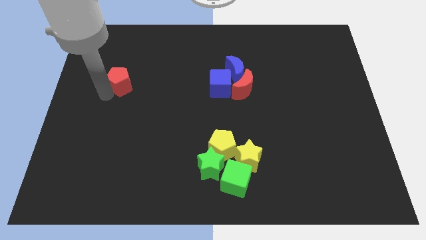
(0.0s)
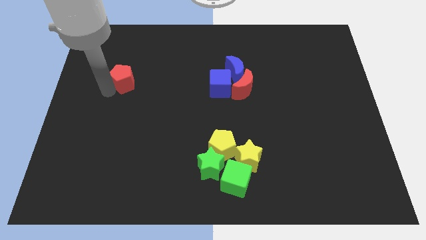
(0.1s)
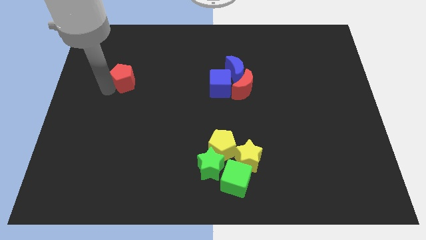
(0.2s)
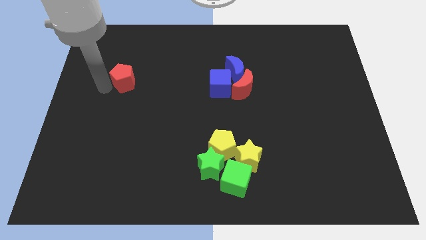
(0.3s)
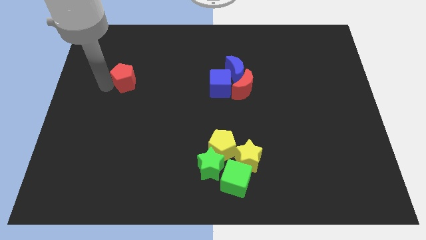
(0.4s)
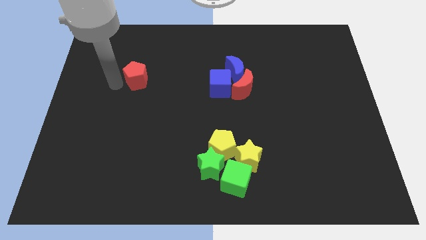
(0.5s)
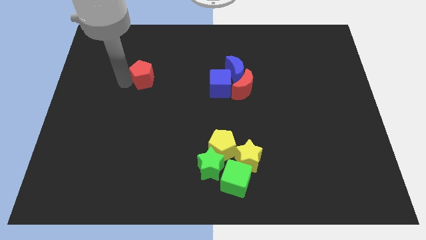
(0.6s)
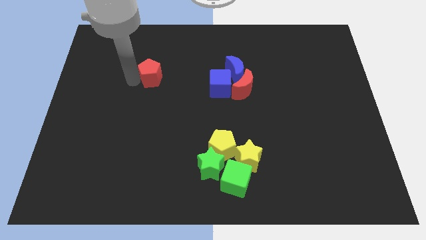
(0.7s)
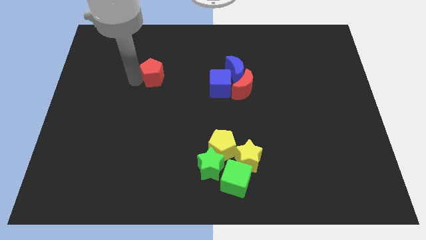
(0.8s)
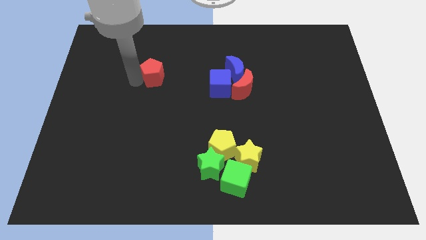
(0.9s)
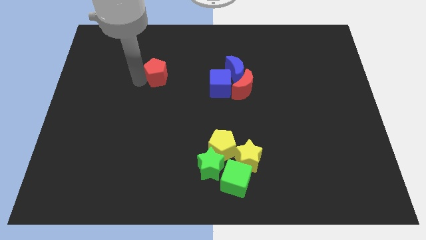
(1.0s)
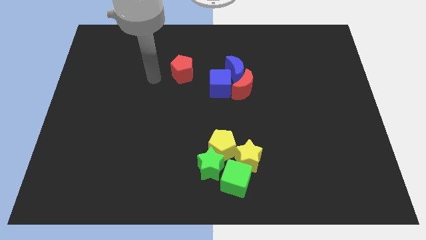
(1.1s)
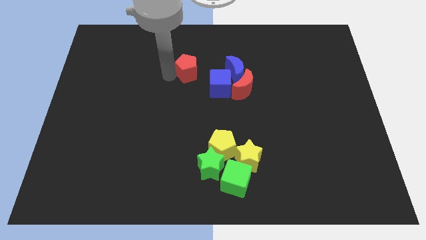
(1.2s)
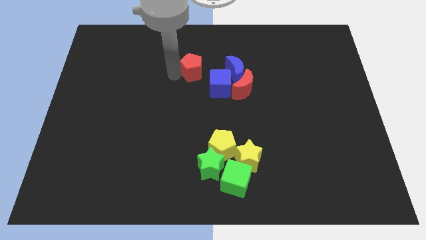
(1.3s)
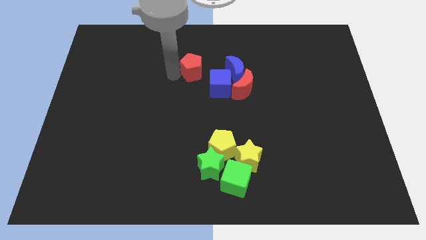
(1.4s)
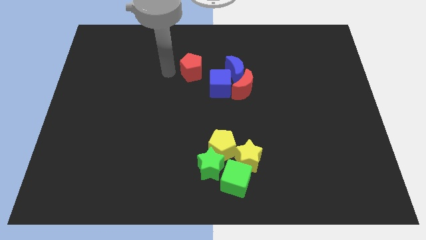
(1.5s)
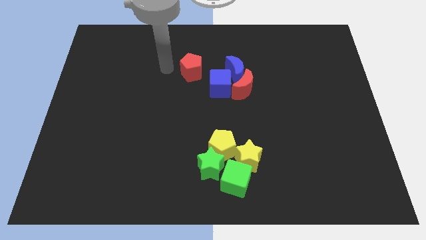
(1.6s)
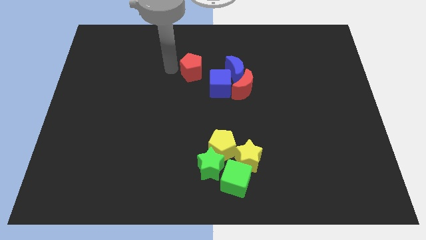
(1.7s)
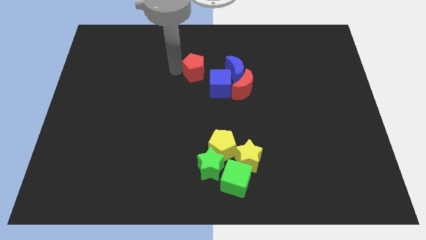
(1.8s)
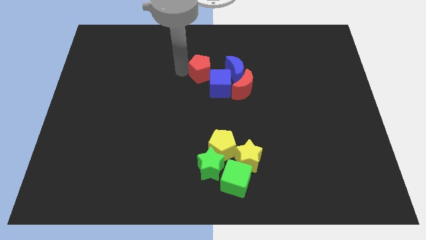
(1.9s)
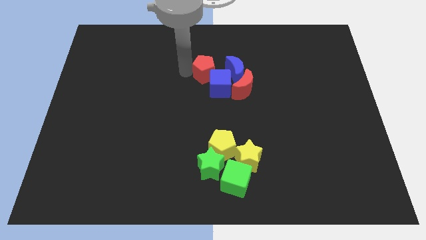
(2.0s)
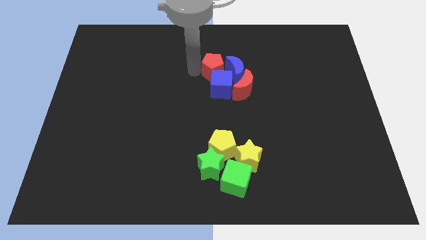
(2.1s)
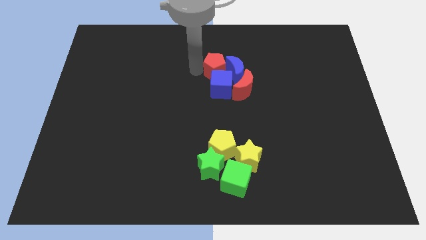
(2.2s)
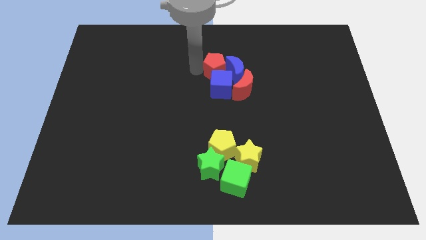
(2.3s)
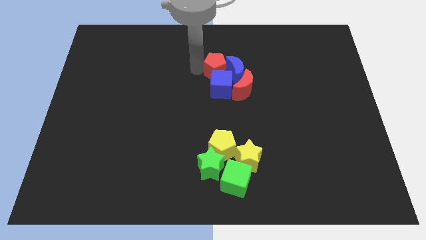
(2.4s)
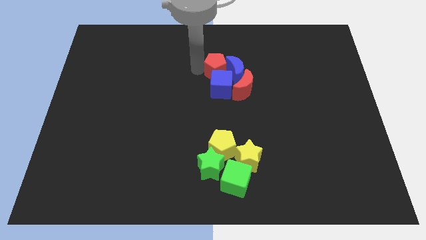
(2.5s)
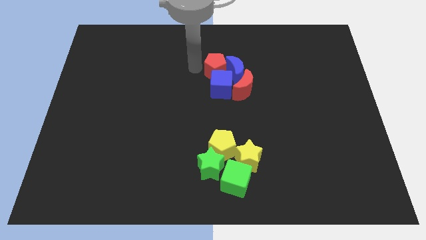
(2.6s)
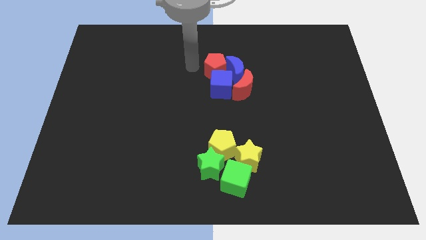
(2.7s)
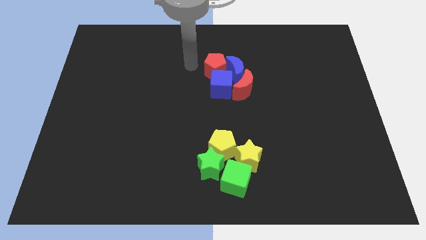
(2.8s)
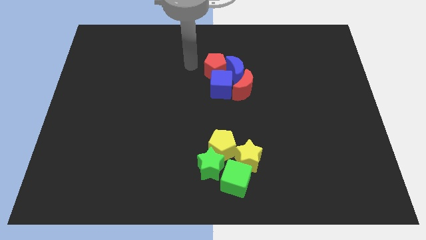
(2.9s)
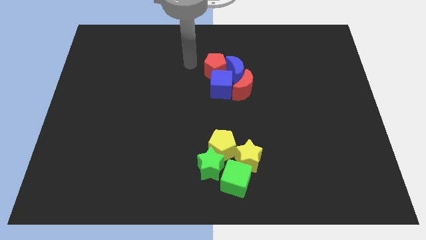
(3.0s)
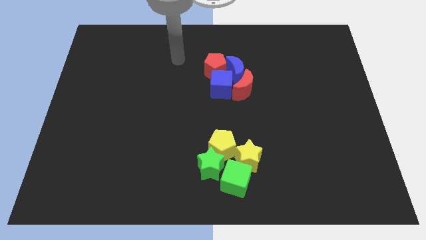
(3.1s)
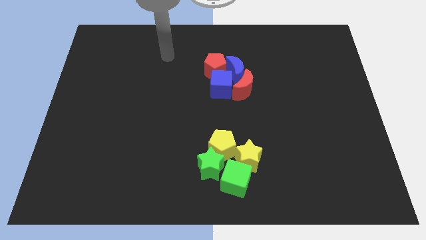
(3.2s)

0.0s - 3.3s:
add the red pentagon to the group of blue blocks and red moon

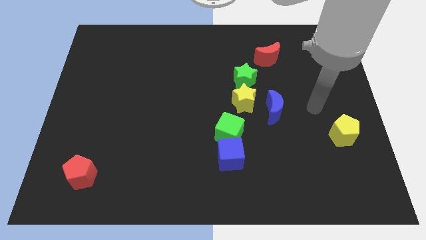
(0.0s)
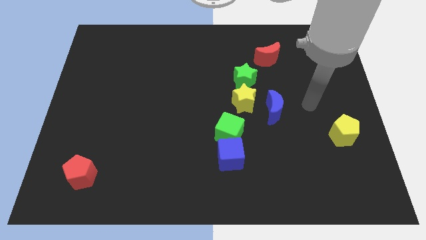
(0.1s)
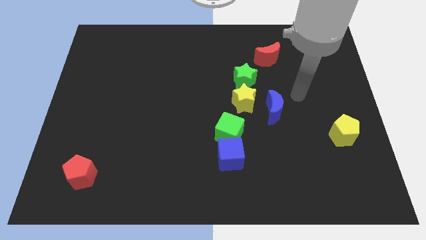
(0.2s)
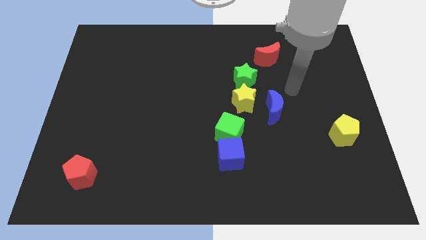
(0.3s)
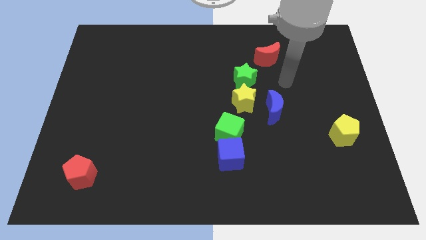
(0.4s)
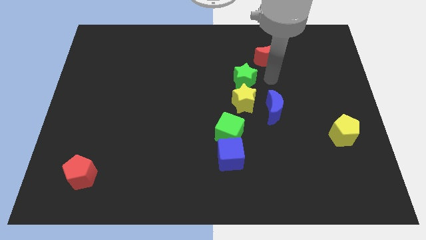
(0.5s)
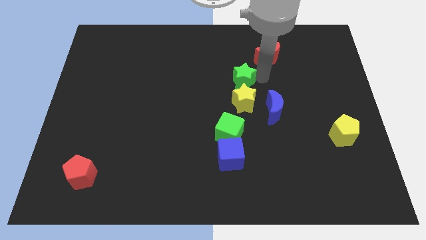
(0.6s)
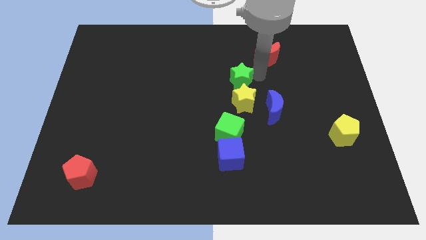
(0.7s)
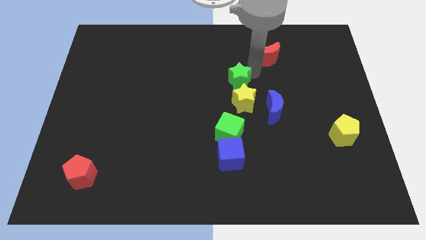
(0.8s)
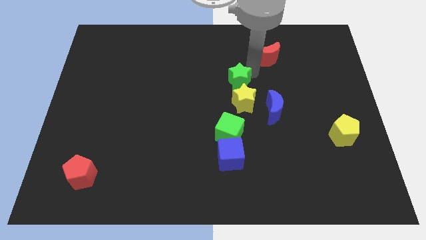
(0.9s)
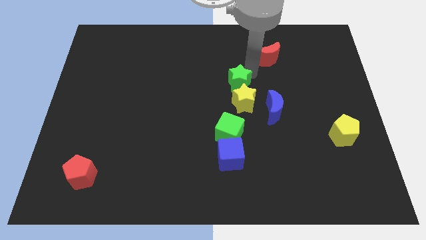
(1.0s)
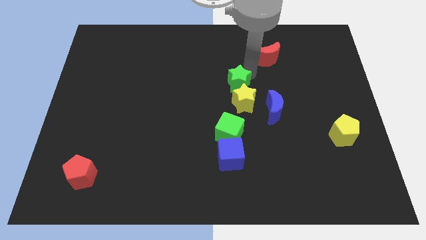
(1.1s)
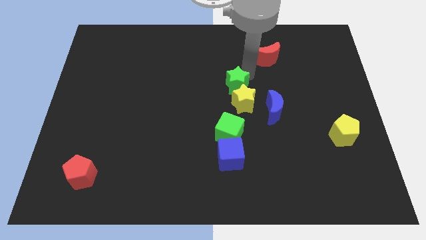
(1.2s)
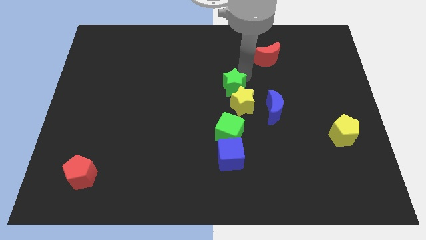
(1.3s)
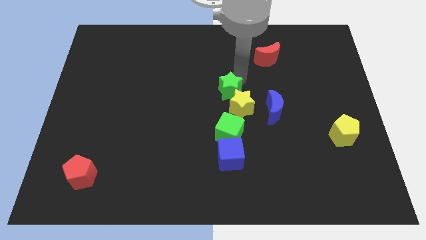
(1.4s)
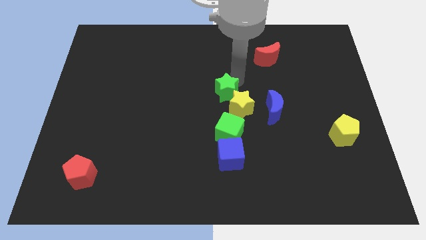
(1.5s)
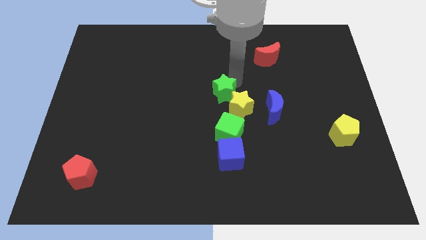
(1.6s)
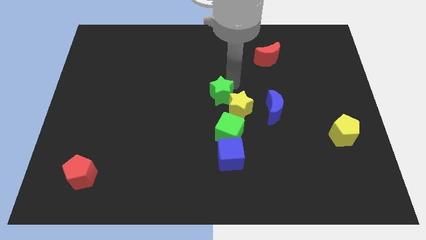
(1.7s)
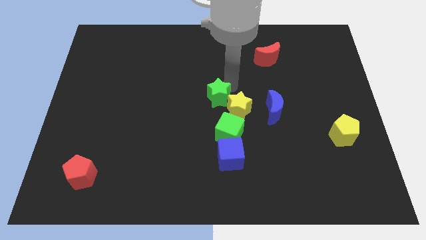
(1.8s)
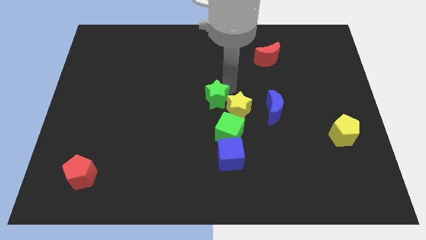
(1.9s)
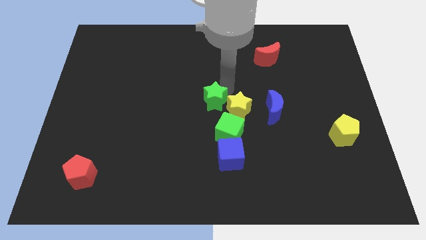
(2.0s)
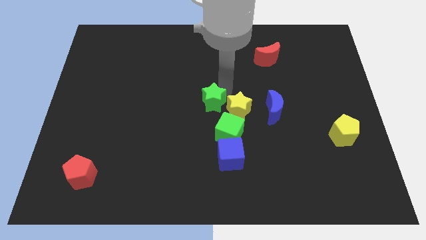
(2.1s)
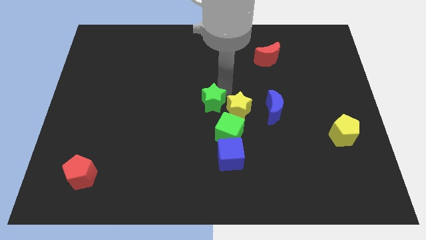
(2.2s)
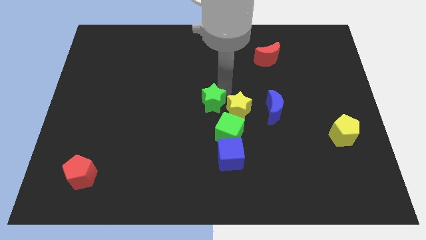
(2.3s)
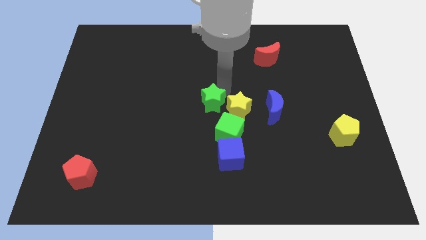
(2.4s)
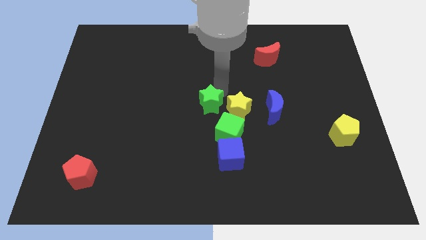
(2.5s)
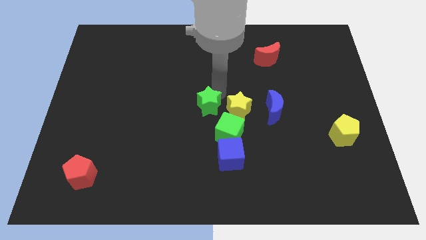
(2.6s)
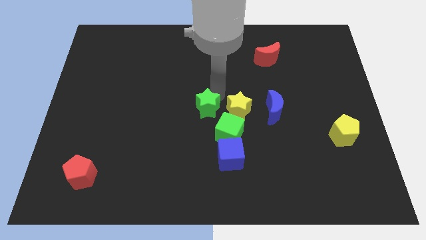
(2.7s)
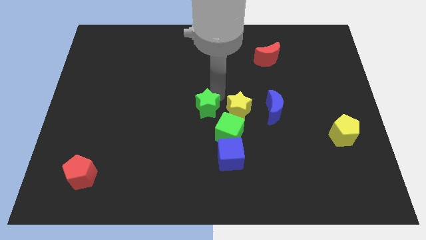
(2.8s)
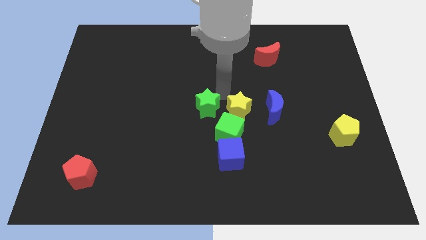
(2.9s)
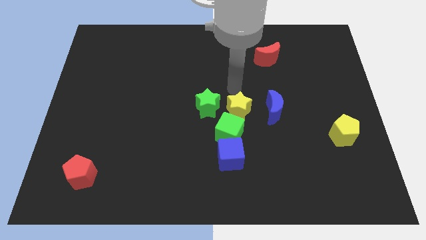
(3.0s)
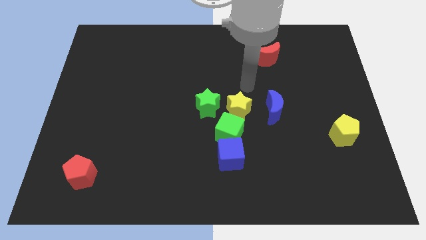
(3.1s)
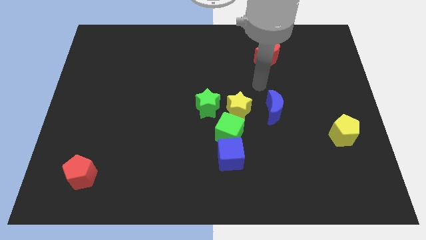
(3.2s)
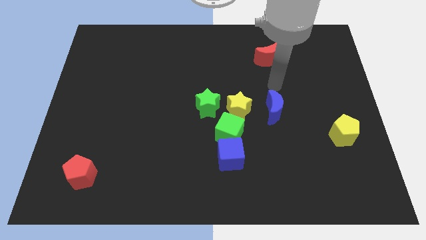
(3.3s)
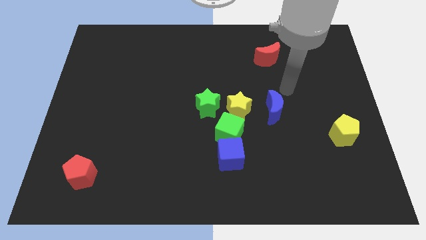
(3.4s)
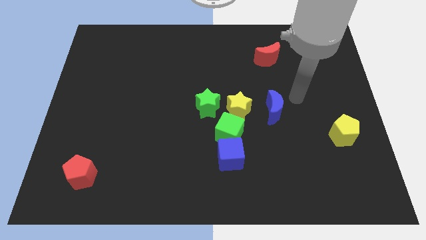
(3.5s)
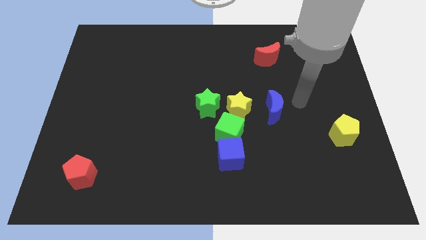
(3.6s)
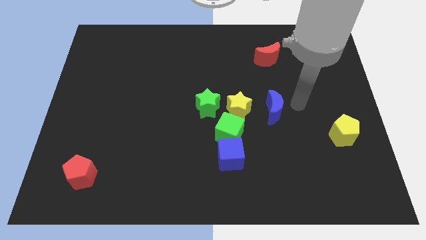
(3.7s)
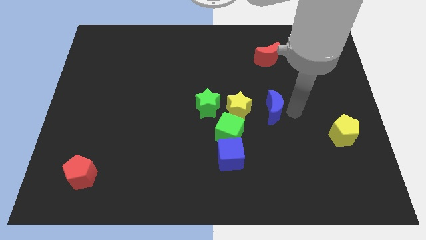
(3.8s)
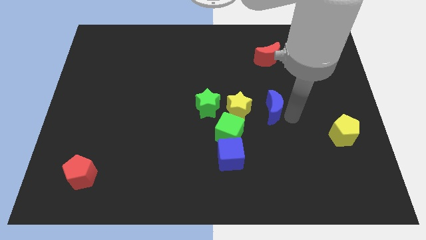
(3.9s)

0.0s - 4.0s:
place the green star adjacent to the yellow star

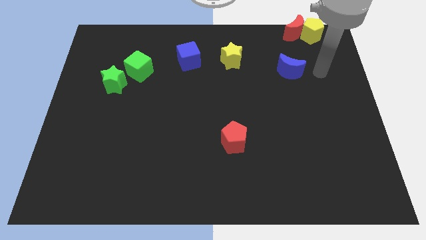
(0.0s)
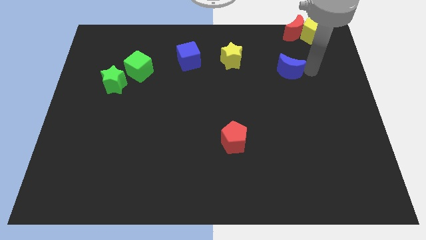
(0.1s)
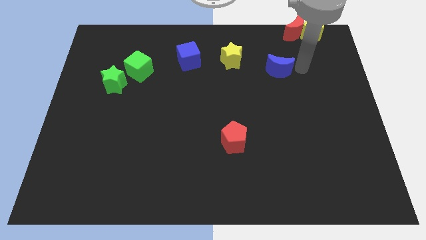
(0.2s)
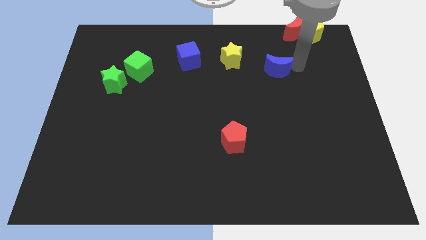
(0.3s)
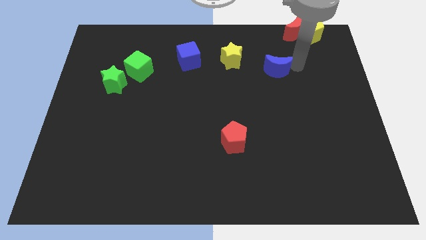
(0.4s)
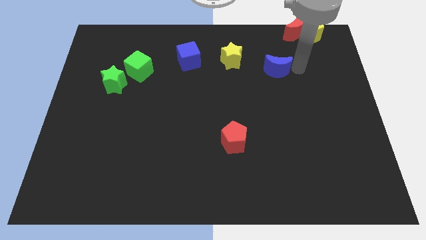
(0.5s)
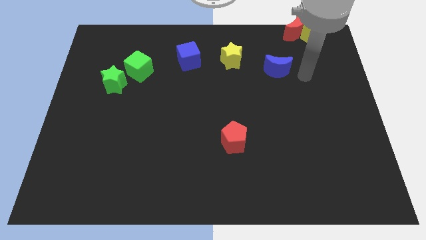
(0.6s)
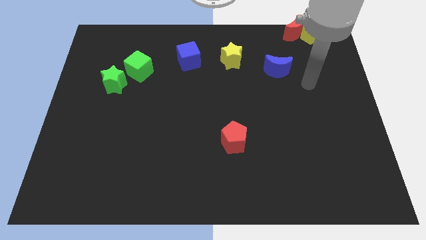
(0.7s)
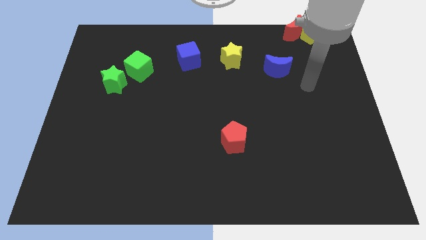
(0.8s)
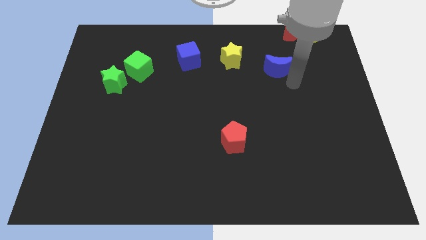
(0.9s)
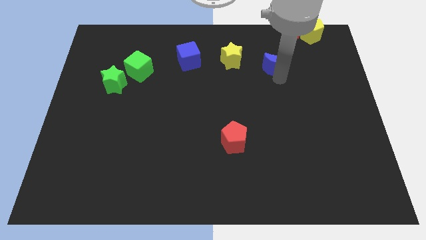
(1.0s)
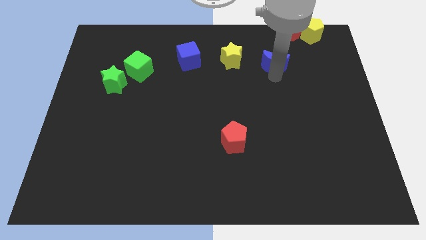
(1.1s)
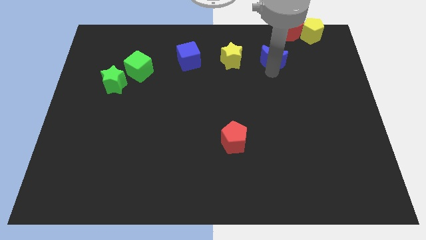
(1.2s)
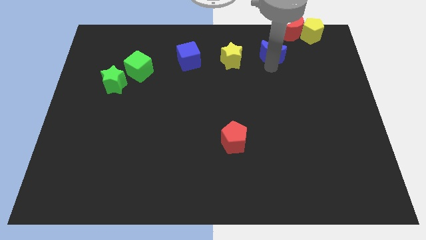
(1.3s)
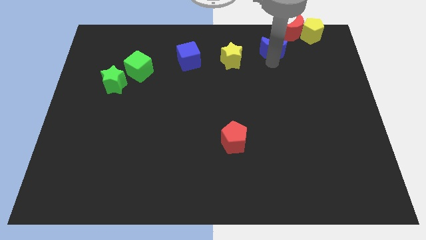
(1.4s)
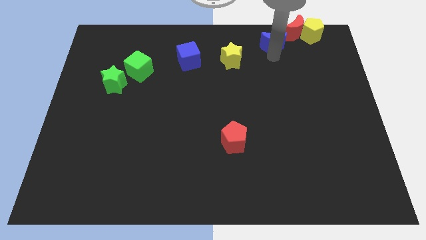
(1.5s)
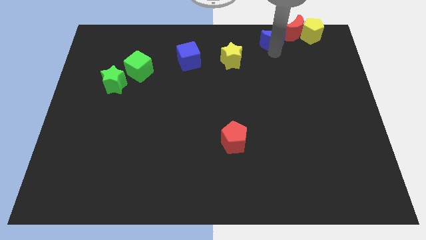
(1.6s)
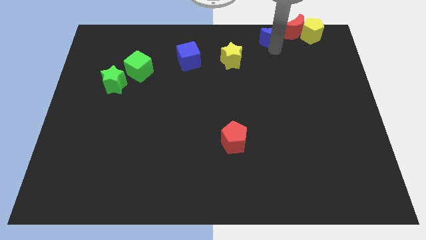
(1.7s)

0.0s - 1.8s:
push the blue moon into red moon
